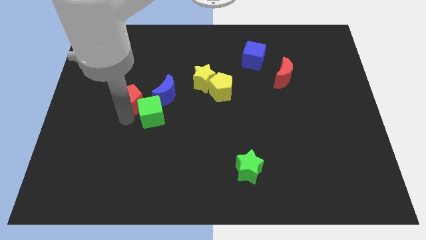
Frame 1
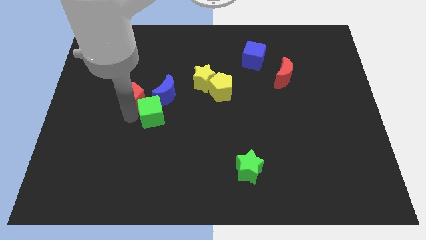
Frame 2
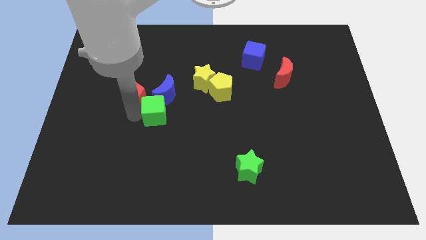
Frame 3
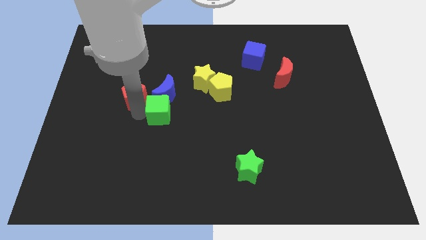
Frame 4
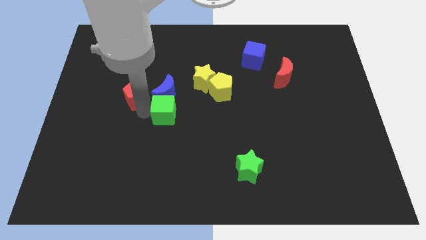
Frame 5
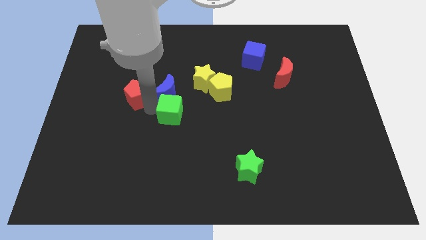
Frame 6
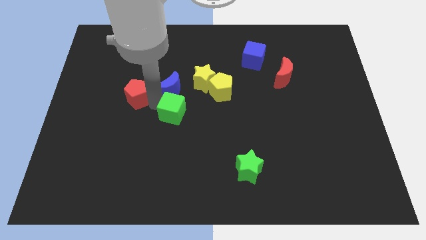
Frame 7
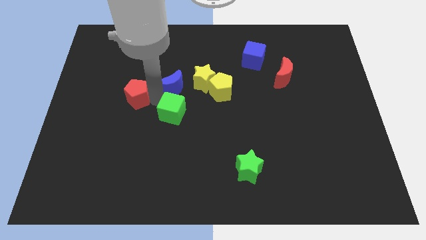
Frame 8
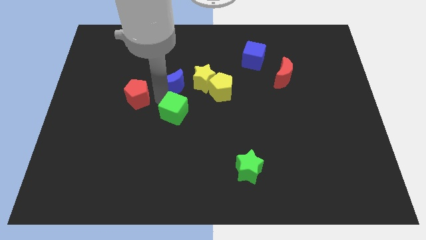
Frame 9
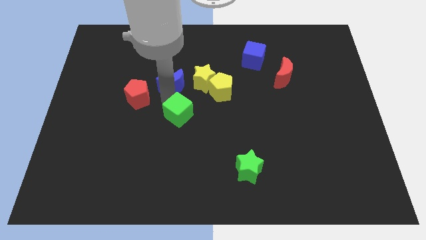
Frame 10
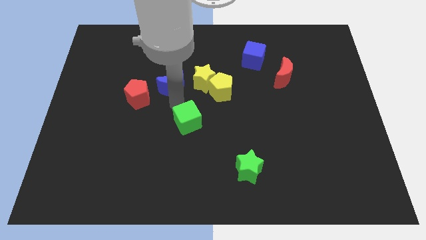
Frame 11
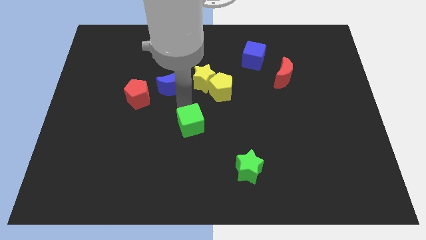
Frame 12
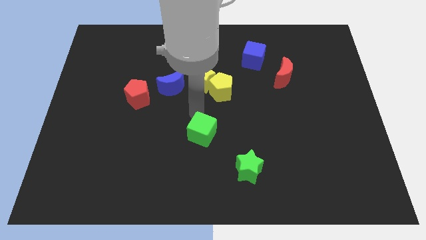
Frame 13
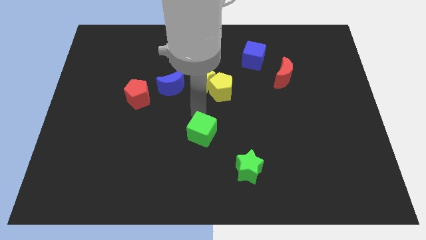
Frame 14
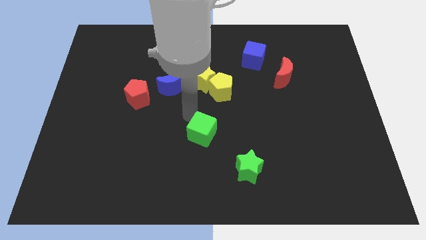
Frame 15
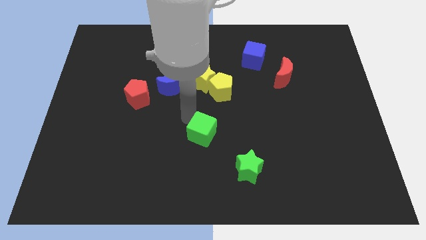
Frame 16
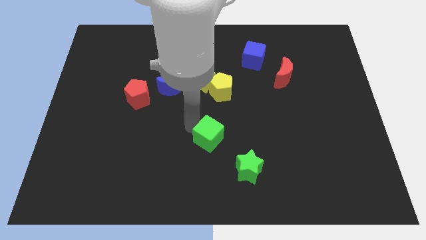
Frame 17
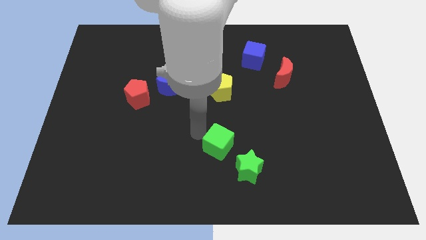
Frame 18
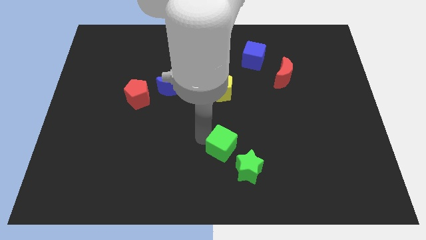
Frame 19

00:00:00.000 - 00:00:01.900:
separate green cube from the red pentagon

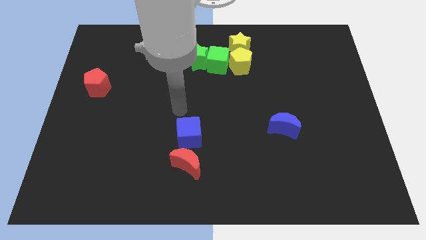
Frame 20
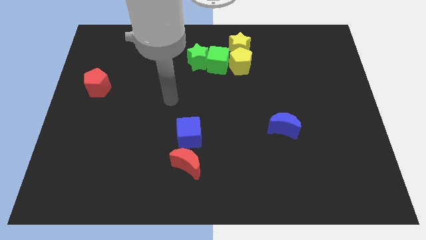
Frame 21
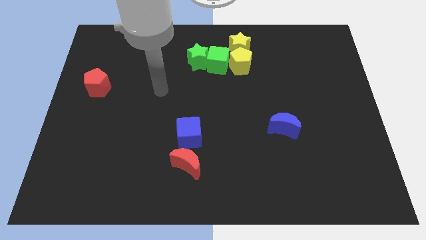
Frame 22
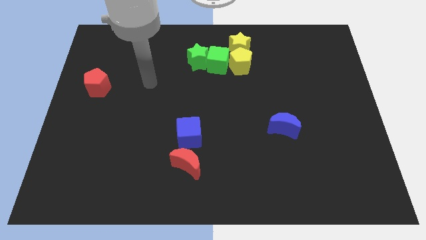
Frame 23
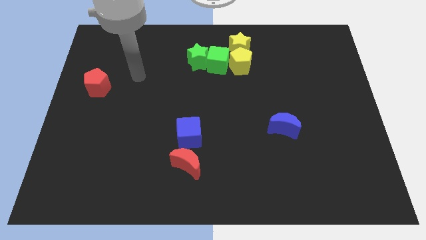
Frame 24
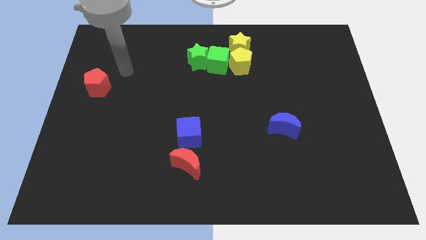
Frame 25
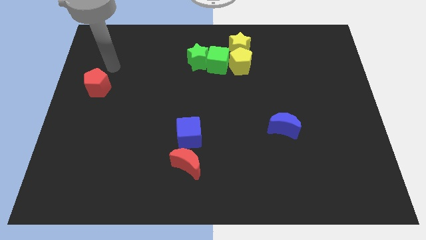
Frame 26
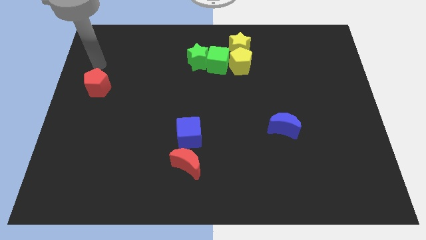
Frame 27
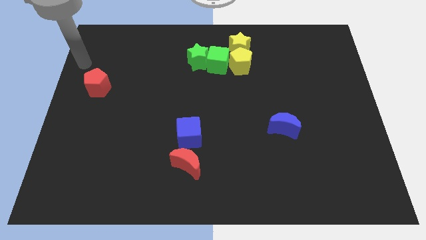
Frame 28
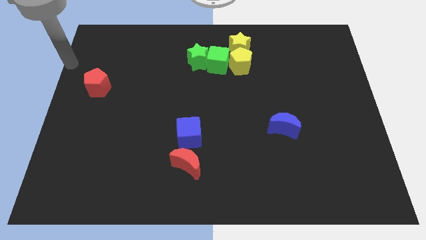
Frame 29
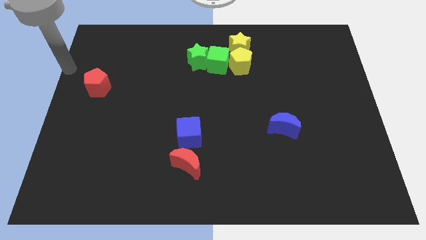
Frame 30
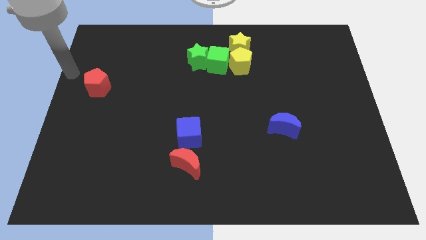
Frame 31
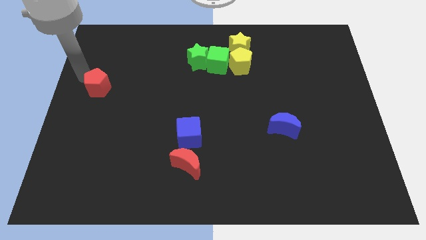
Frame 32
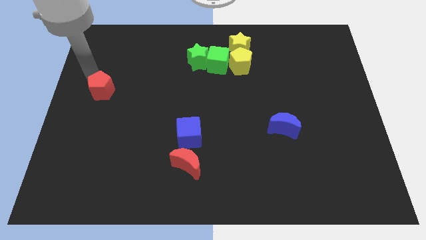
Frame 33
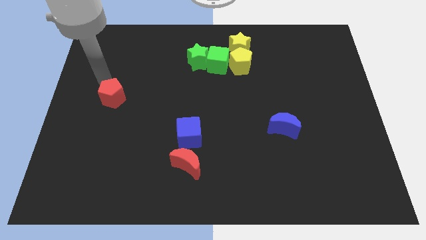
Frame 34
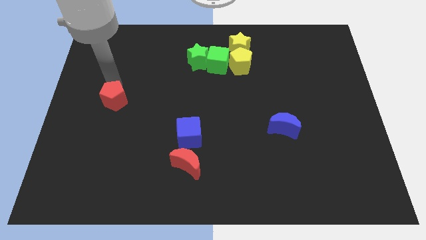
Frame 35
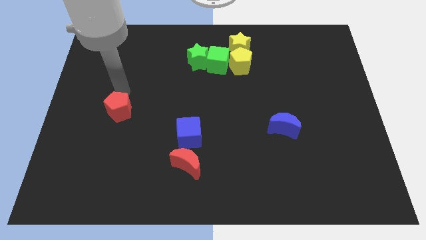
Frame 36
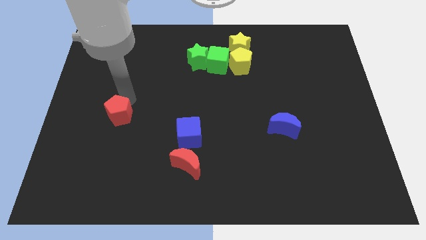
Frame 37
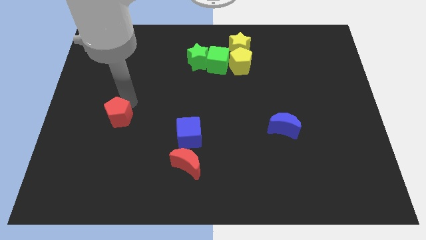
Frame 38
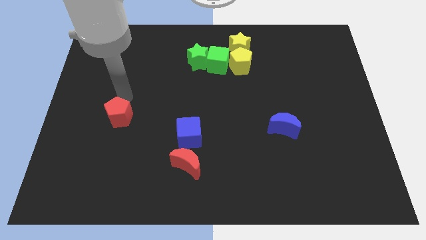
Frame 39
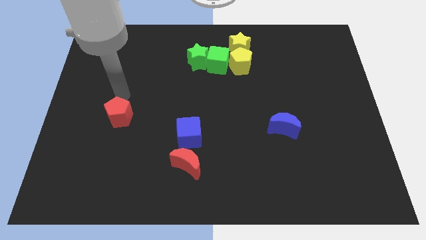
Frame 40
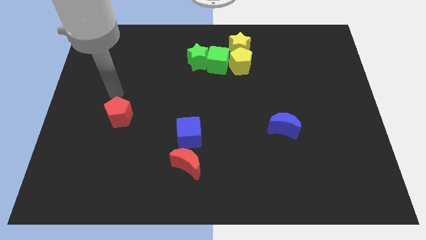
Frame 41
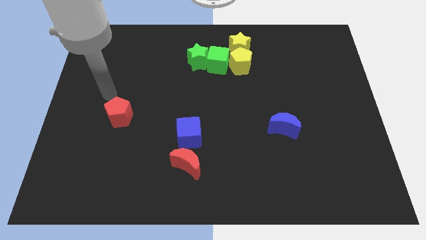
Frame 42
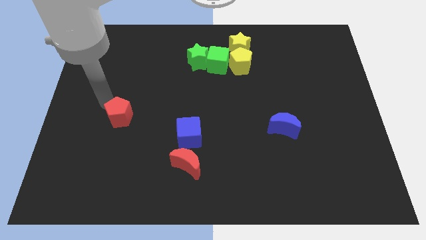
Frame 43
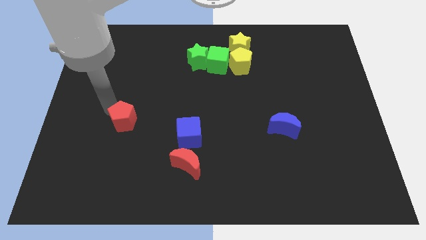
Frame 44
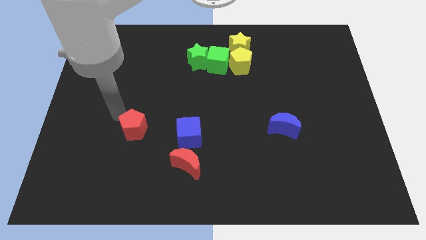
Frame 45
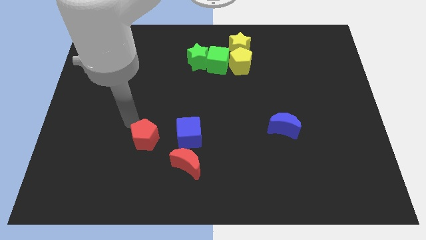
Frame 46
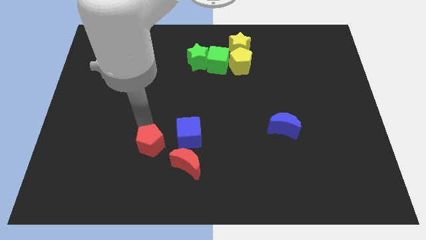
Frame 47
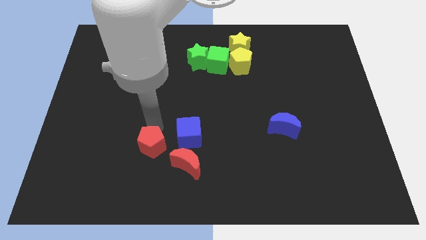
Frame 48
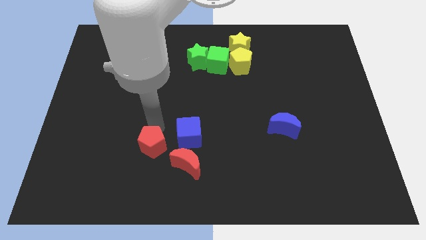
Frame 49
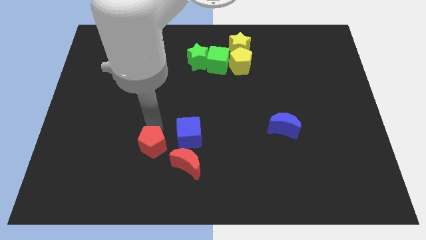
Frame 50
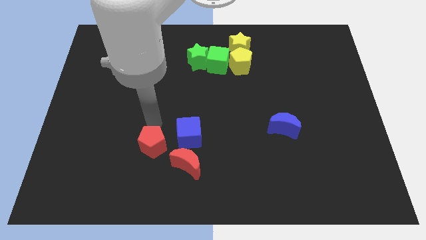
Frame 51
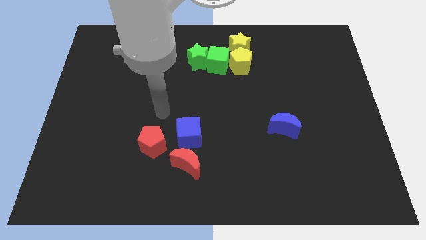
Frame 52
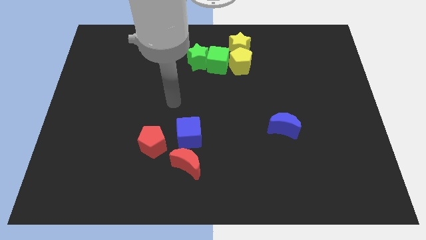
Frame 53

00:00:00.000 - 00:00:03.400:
place the red pentagon to the left side of red moon

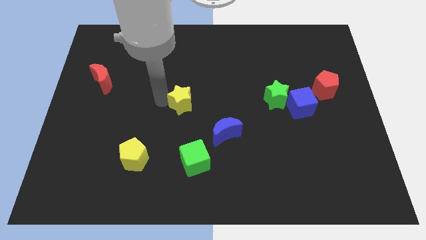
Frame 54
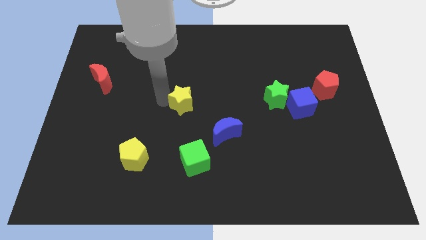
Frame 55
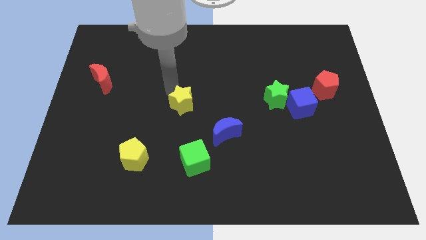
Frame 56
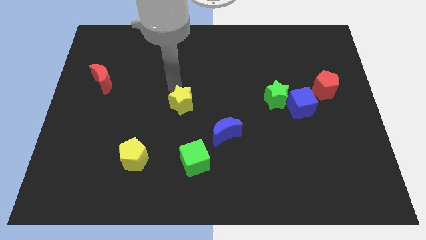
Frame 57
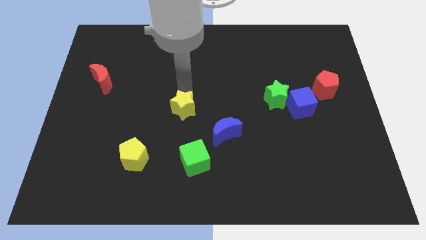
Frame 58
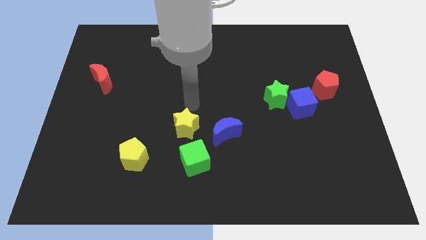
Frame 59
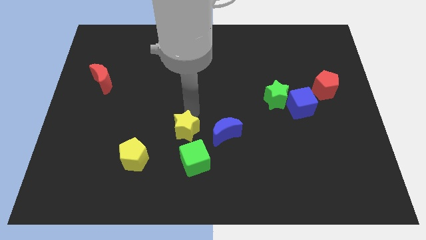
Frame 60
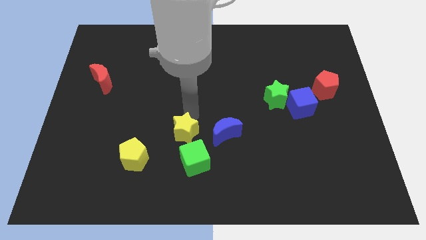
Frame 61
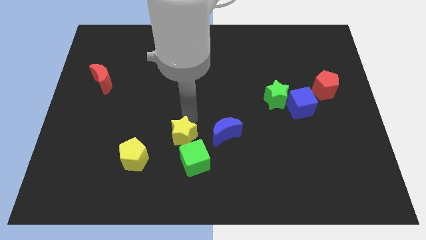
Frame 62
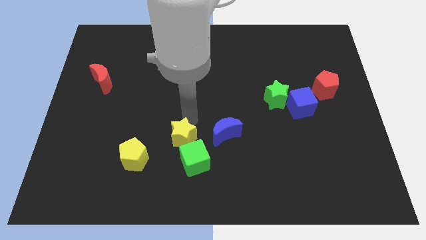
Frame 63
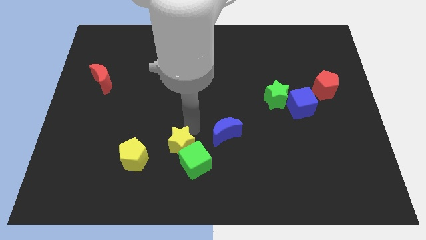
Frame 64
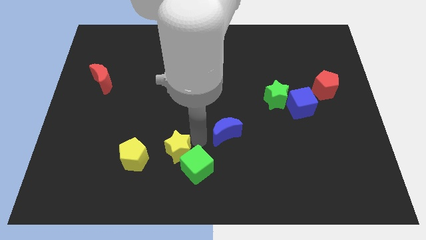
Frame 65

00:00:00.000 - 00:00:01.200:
push the yellow star into the green cube

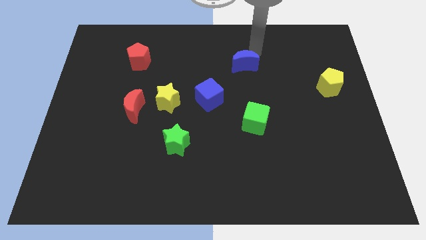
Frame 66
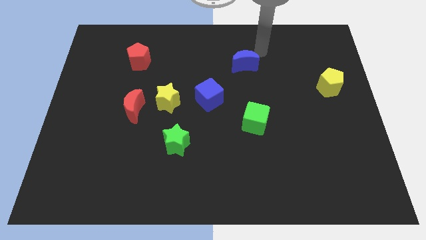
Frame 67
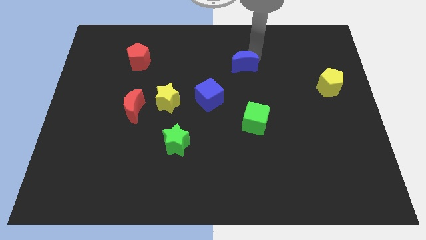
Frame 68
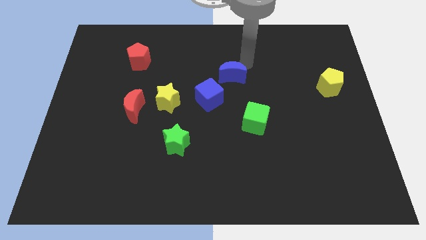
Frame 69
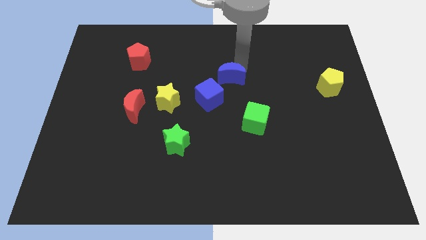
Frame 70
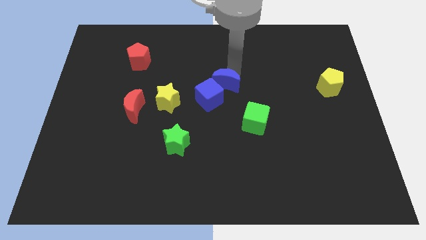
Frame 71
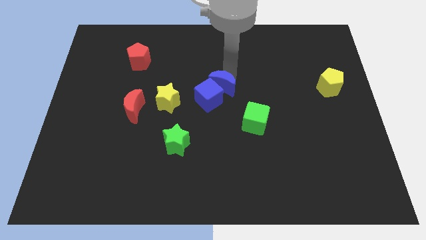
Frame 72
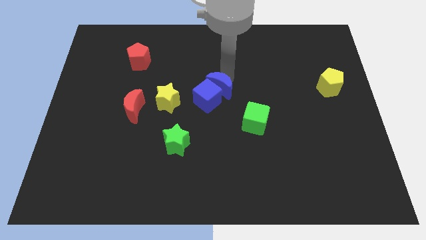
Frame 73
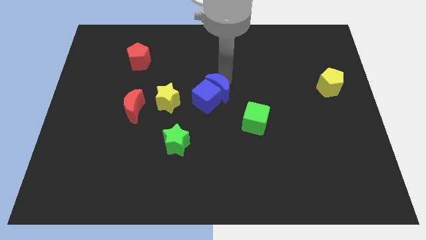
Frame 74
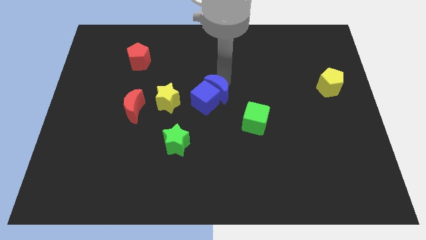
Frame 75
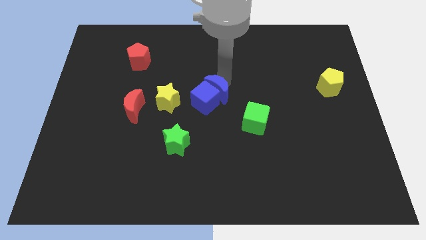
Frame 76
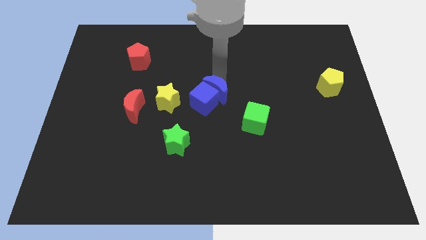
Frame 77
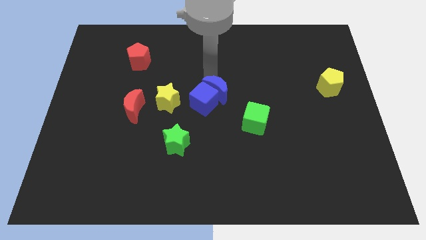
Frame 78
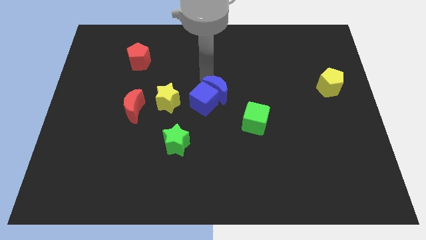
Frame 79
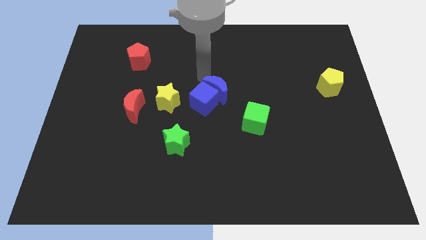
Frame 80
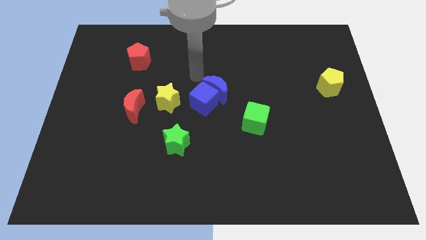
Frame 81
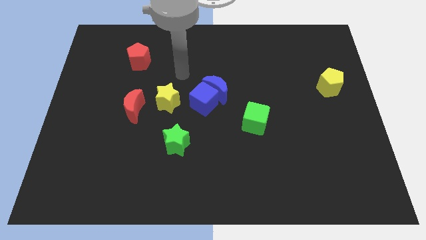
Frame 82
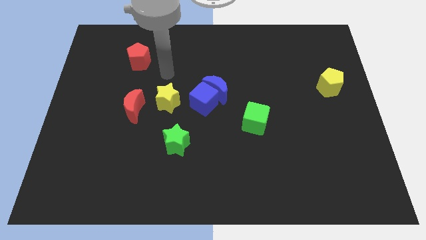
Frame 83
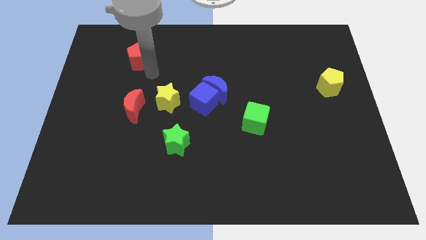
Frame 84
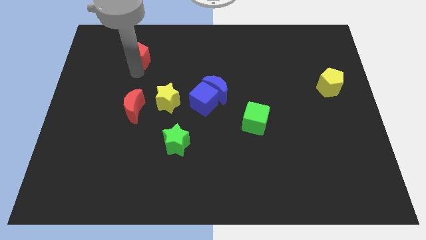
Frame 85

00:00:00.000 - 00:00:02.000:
push the blue moon into the blue cube

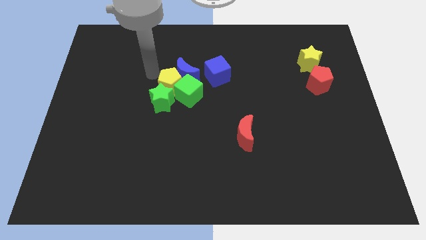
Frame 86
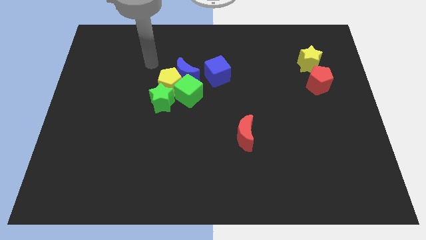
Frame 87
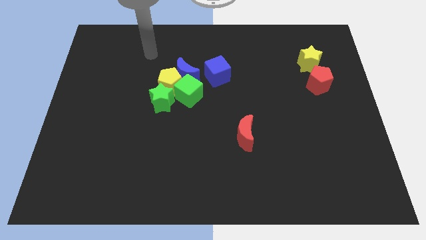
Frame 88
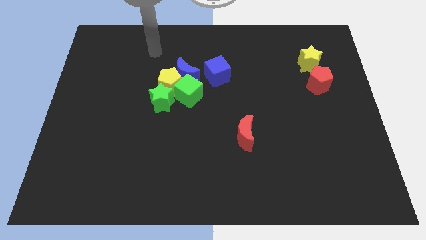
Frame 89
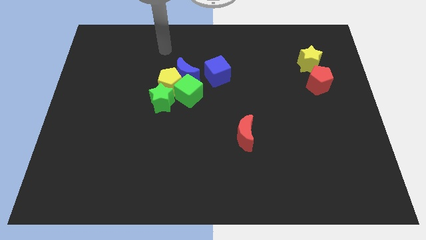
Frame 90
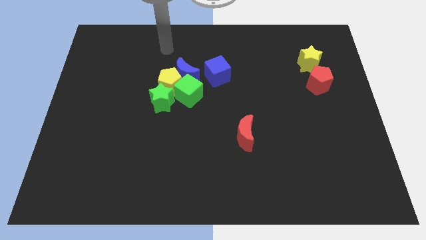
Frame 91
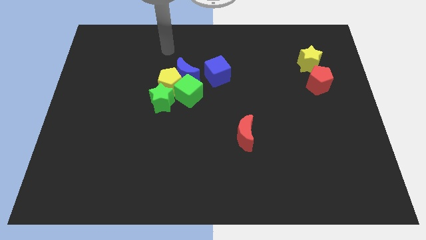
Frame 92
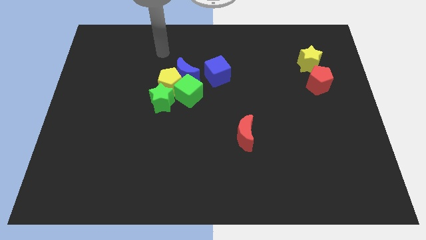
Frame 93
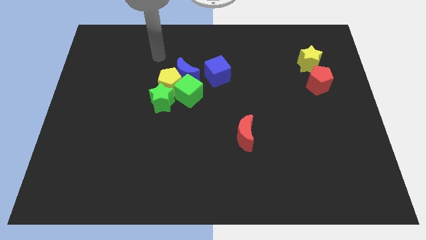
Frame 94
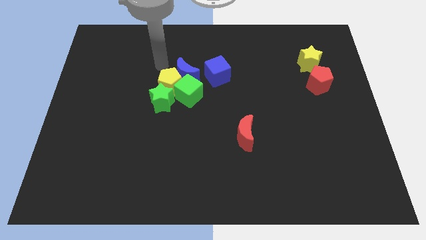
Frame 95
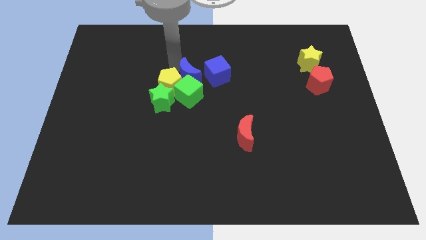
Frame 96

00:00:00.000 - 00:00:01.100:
place the arm above the yellow pentagon
